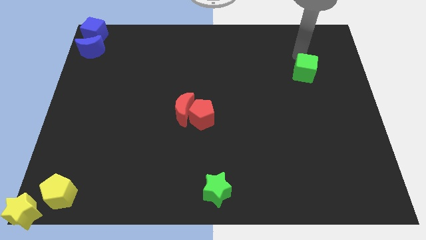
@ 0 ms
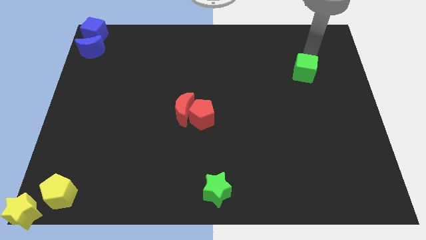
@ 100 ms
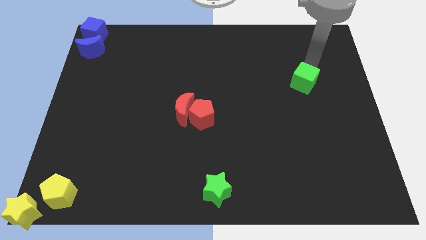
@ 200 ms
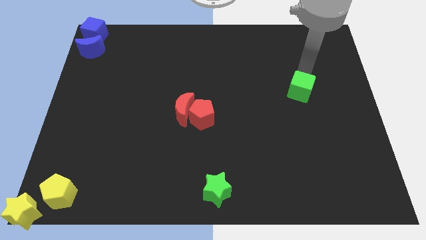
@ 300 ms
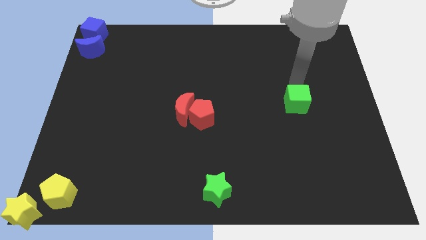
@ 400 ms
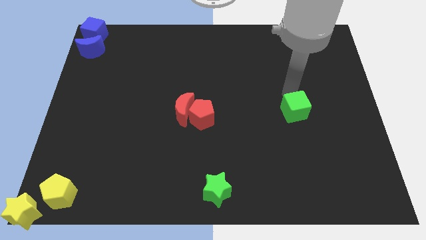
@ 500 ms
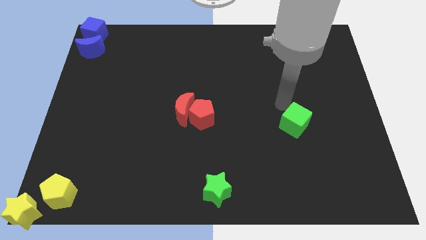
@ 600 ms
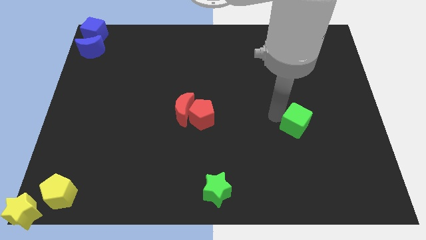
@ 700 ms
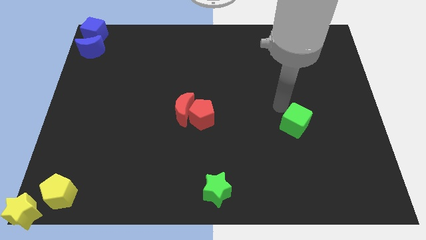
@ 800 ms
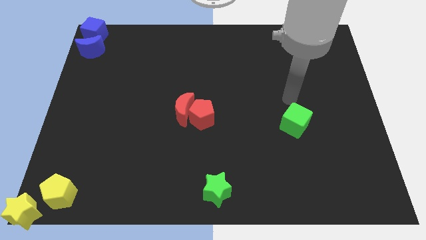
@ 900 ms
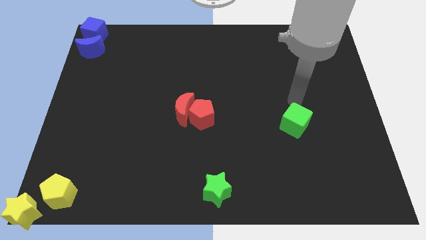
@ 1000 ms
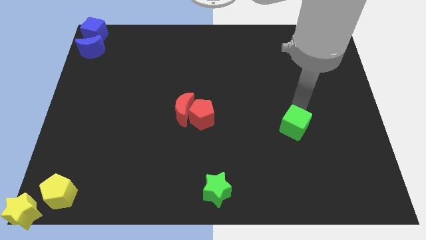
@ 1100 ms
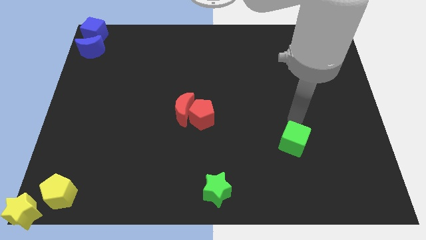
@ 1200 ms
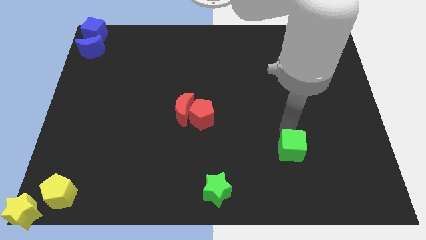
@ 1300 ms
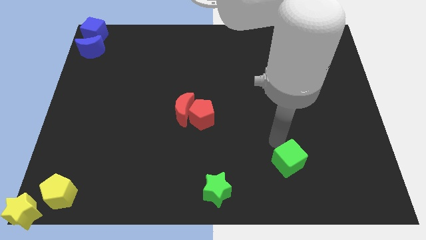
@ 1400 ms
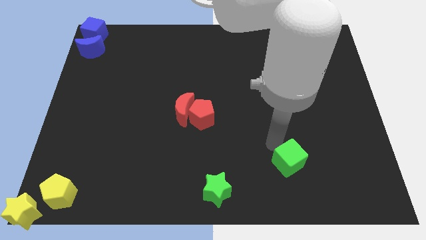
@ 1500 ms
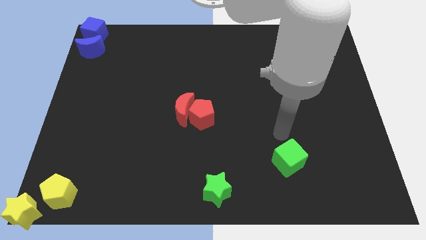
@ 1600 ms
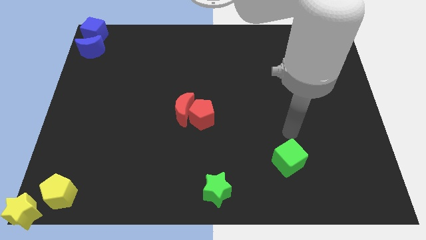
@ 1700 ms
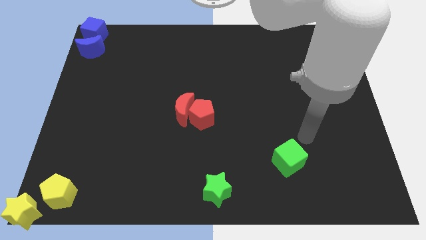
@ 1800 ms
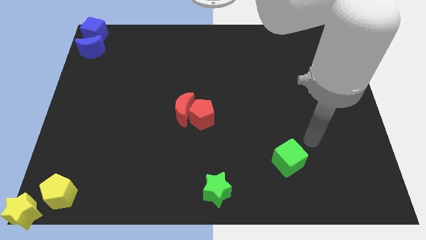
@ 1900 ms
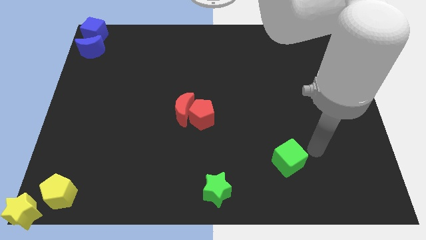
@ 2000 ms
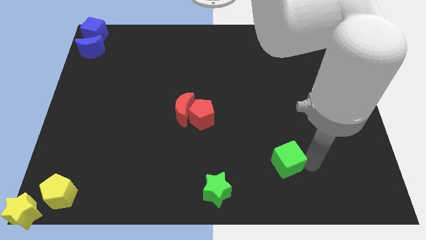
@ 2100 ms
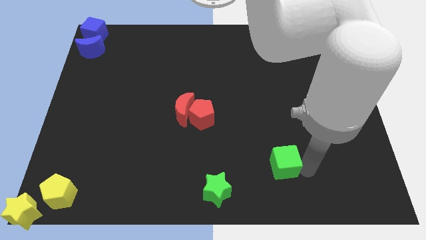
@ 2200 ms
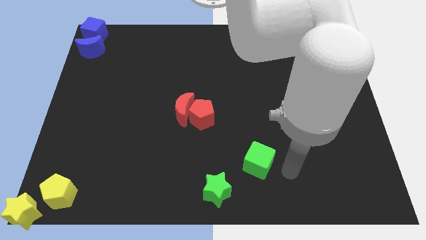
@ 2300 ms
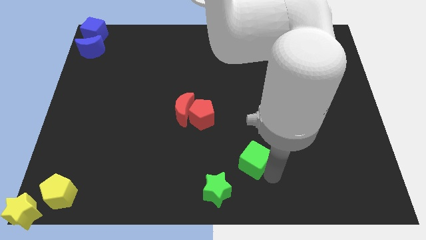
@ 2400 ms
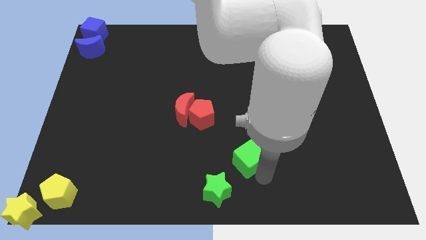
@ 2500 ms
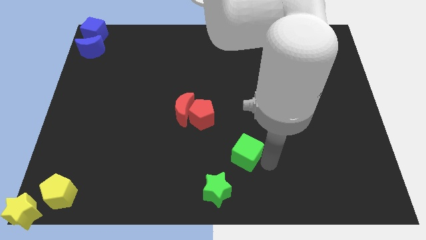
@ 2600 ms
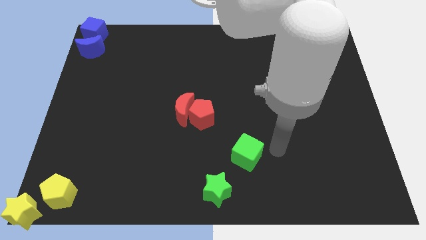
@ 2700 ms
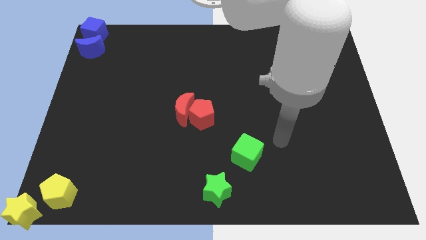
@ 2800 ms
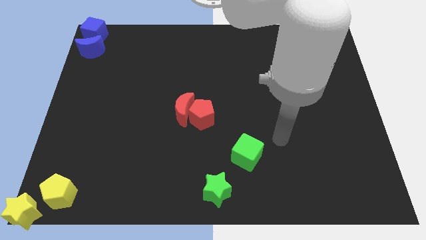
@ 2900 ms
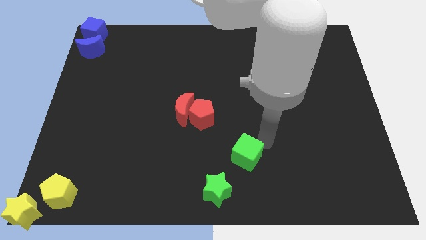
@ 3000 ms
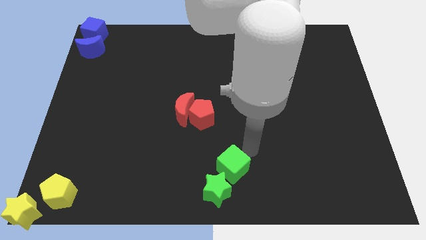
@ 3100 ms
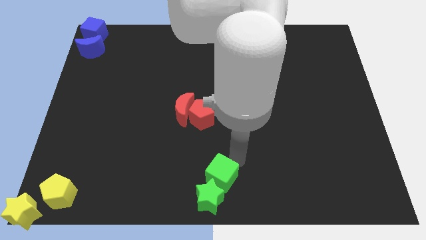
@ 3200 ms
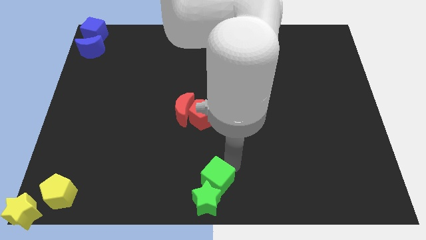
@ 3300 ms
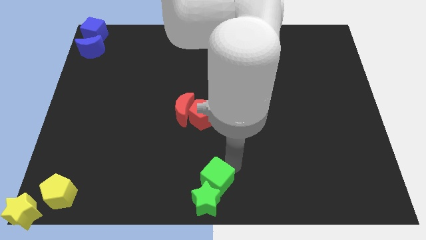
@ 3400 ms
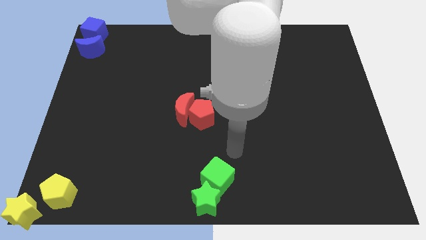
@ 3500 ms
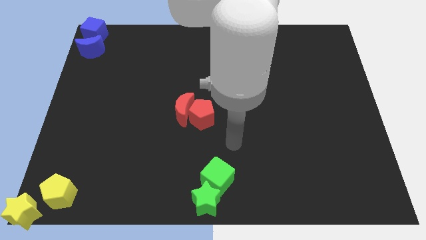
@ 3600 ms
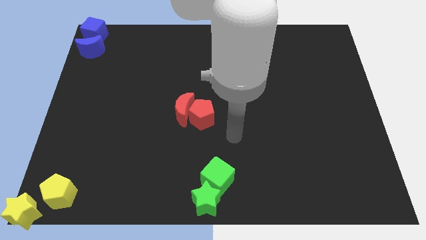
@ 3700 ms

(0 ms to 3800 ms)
move green cube into green star

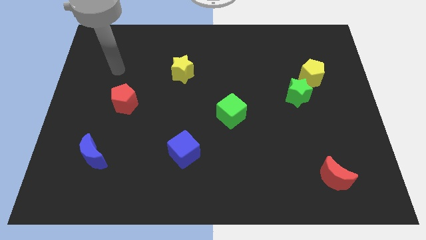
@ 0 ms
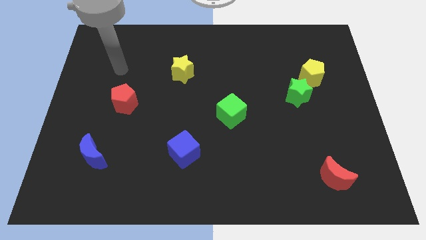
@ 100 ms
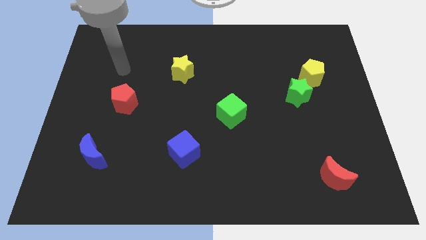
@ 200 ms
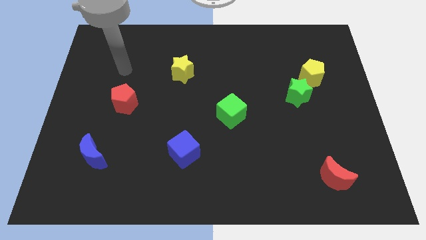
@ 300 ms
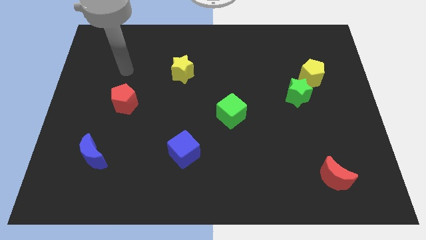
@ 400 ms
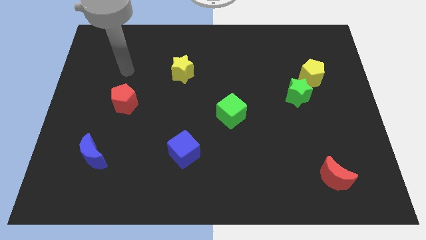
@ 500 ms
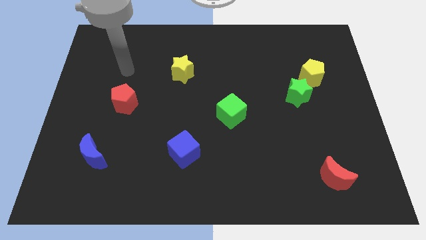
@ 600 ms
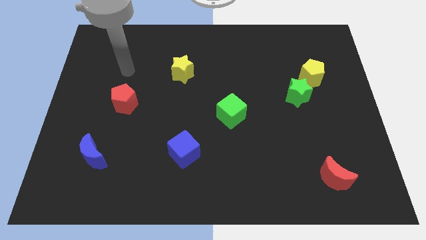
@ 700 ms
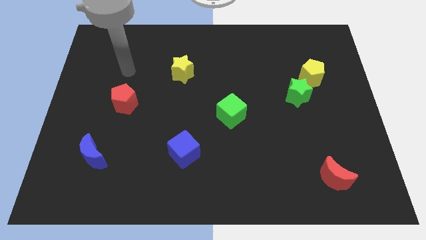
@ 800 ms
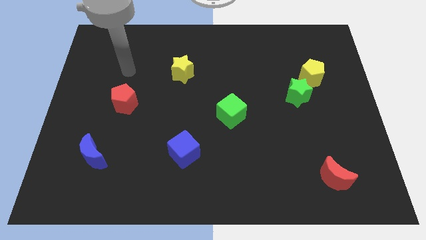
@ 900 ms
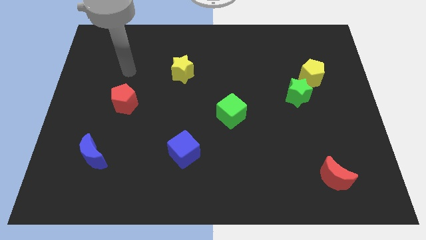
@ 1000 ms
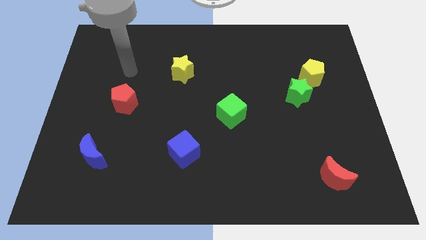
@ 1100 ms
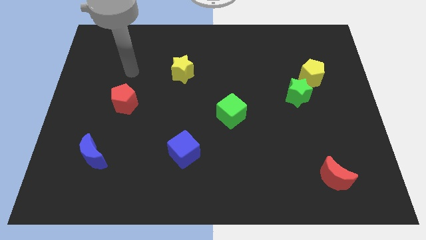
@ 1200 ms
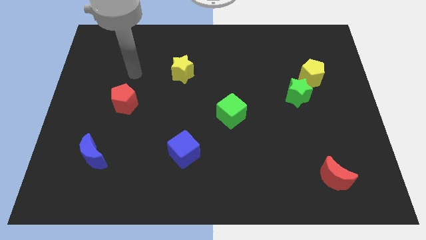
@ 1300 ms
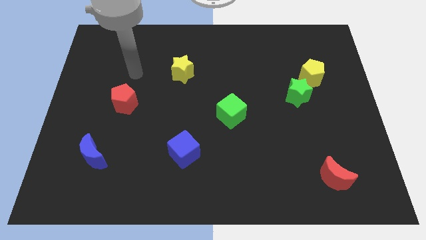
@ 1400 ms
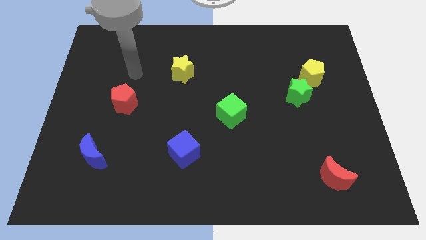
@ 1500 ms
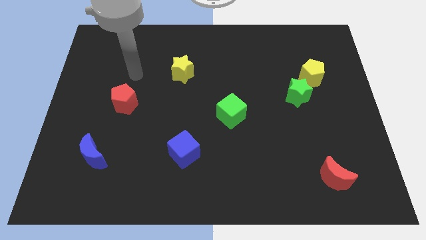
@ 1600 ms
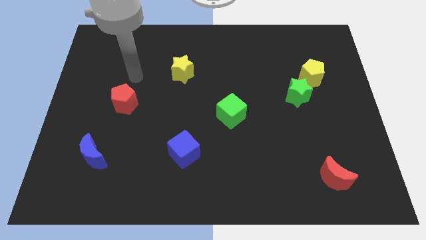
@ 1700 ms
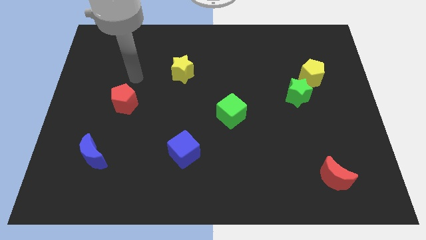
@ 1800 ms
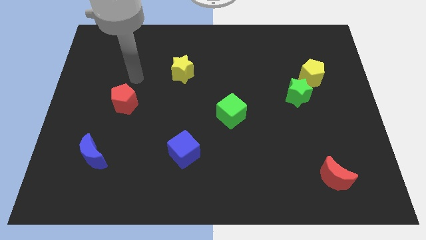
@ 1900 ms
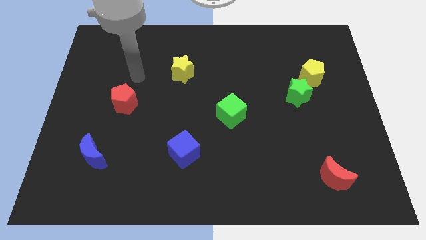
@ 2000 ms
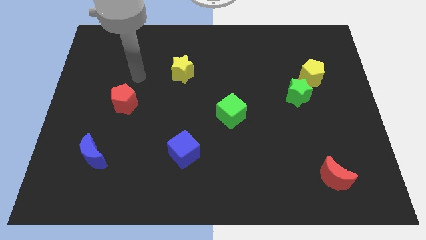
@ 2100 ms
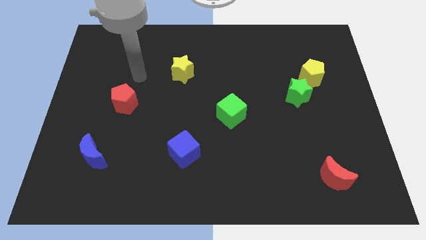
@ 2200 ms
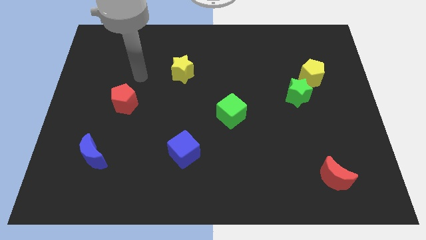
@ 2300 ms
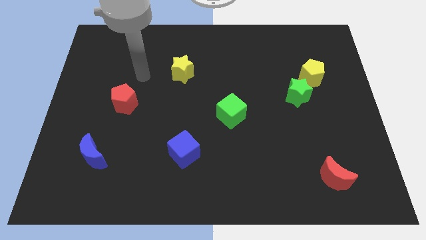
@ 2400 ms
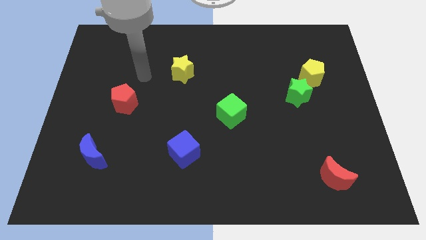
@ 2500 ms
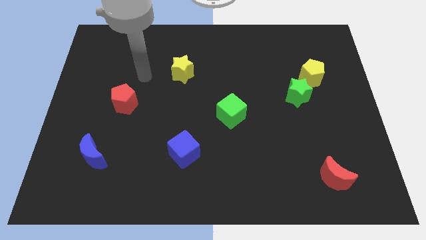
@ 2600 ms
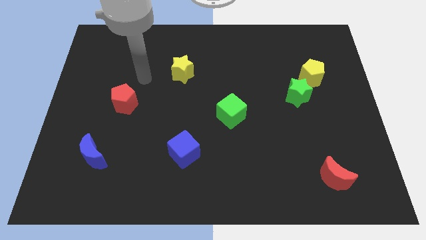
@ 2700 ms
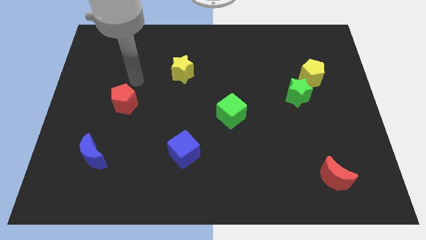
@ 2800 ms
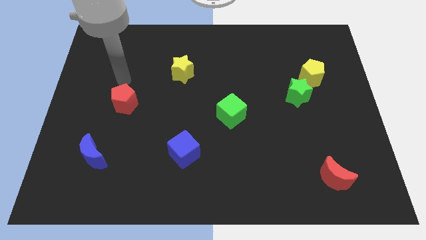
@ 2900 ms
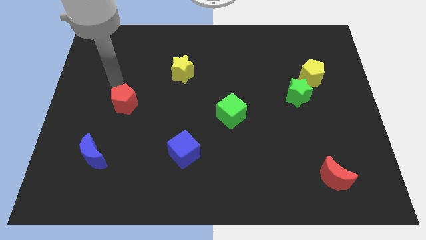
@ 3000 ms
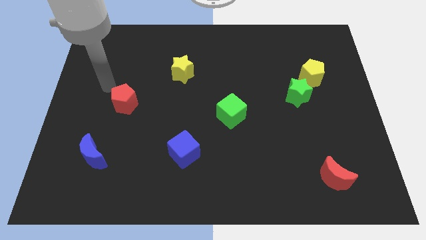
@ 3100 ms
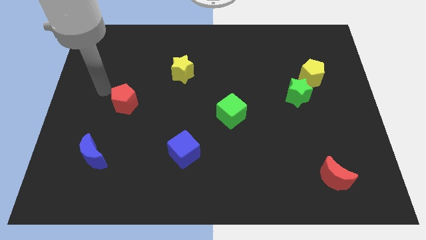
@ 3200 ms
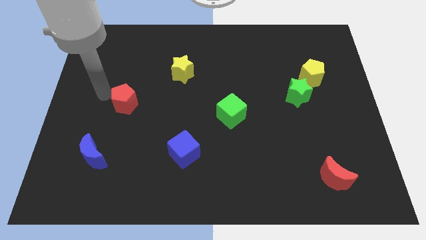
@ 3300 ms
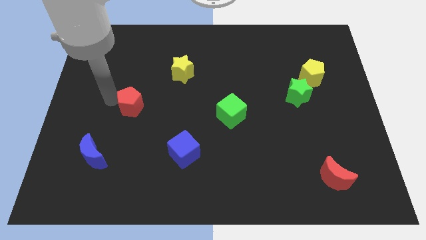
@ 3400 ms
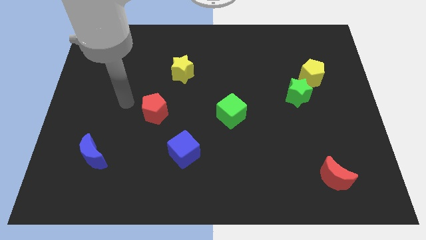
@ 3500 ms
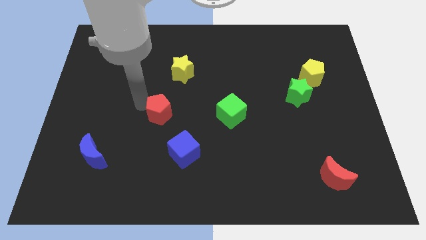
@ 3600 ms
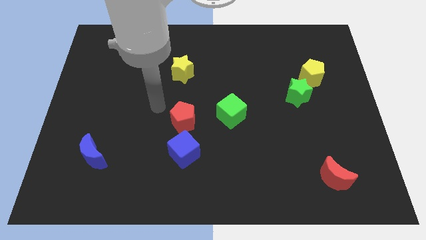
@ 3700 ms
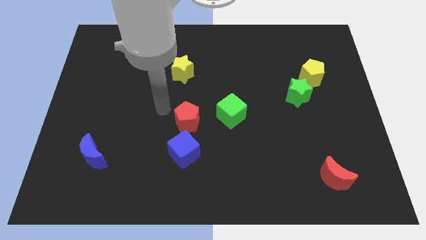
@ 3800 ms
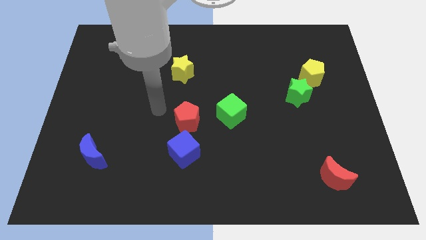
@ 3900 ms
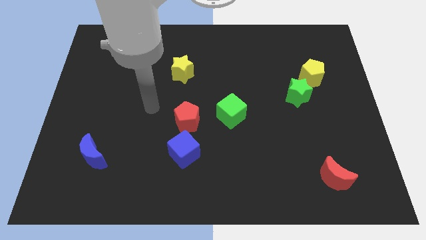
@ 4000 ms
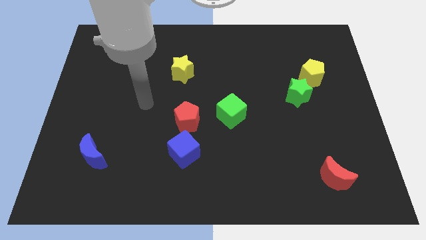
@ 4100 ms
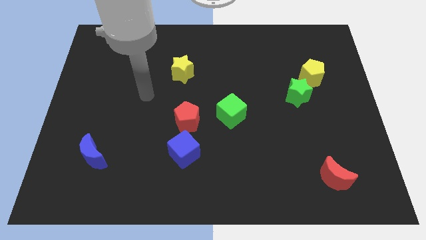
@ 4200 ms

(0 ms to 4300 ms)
move red pentagon on top of the blue cube

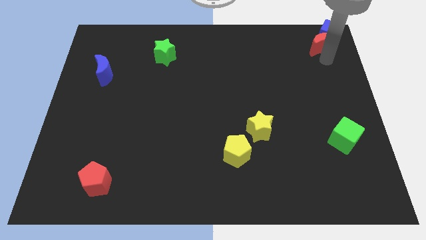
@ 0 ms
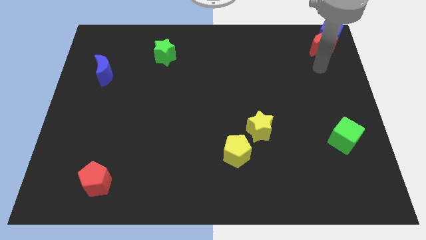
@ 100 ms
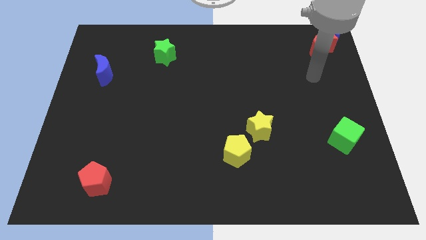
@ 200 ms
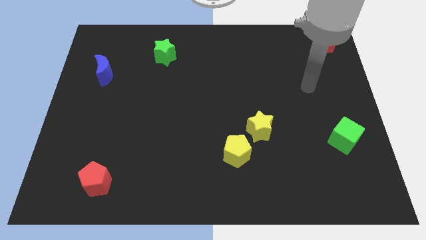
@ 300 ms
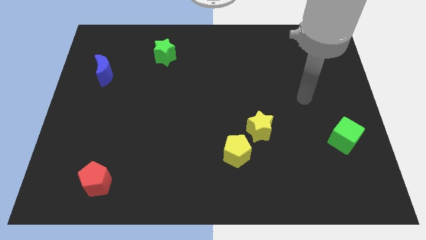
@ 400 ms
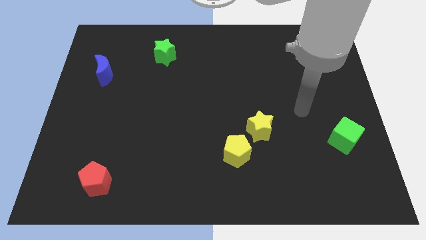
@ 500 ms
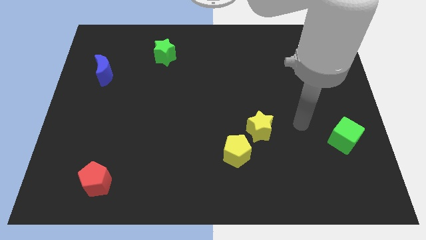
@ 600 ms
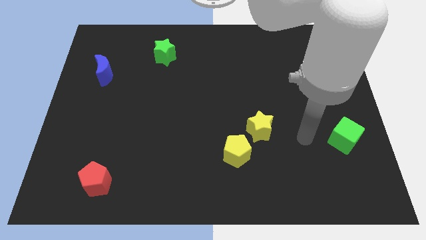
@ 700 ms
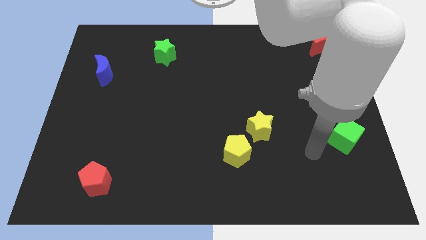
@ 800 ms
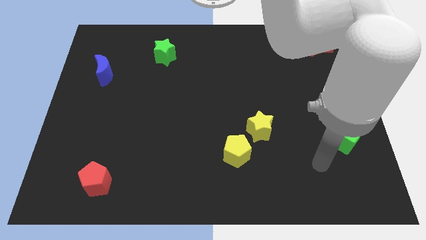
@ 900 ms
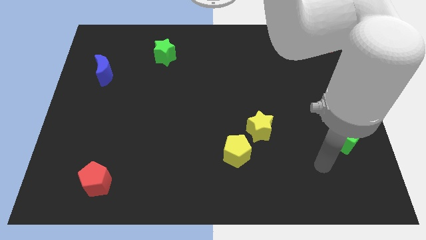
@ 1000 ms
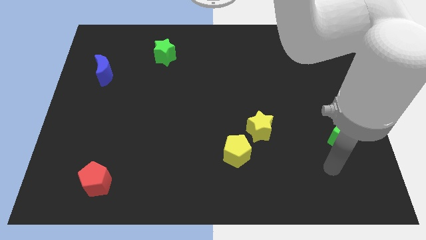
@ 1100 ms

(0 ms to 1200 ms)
move the arm away from the red moon
